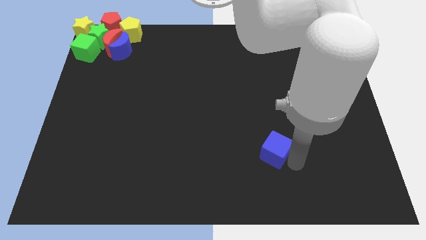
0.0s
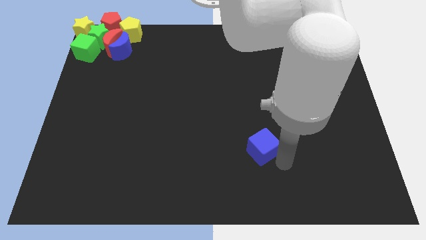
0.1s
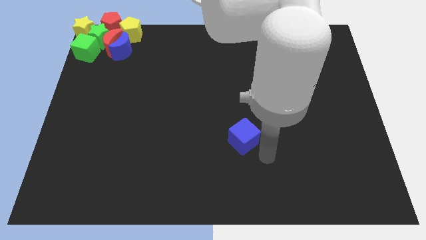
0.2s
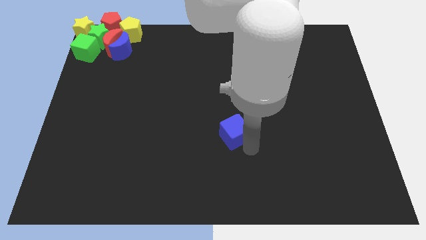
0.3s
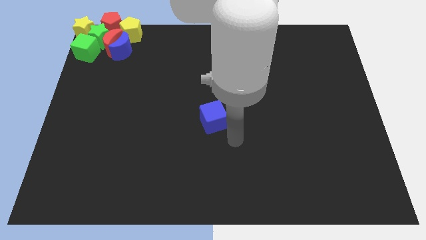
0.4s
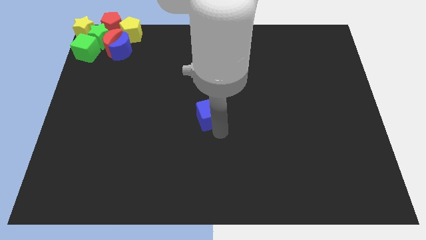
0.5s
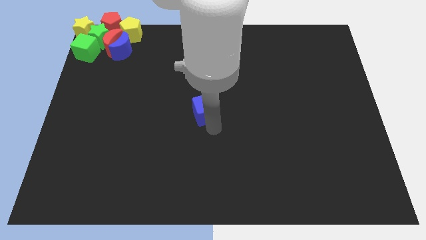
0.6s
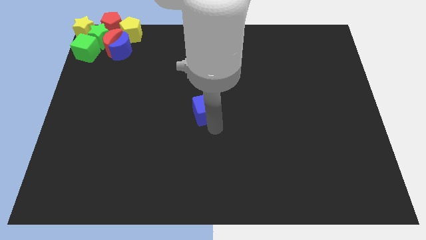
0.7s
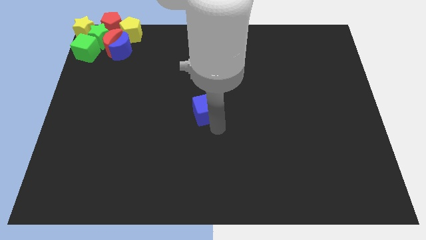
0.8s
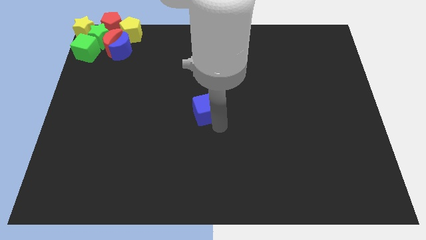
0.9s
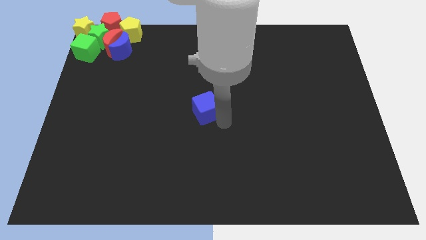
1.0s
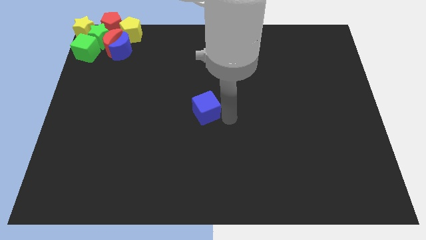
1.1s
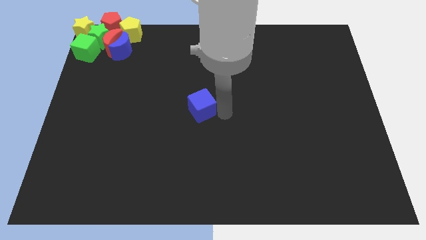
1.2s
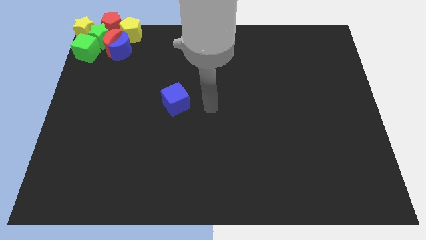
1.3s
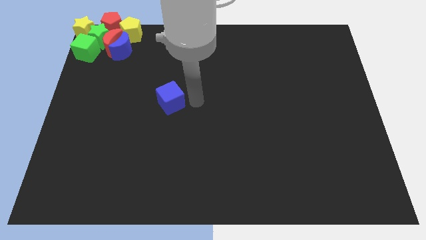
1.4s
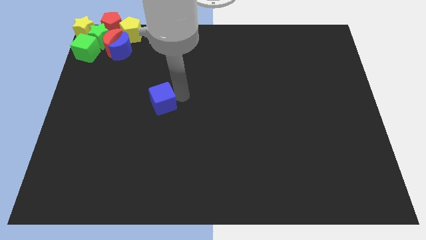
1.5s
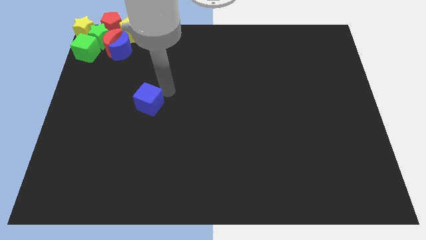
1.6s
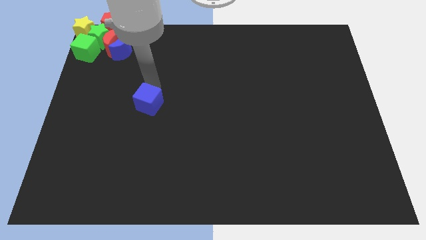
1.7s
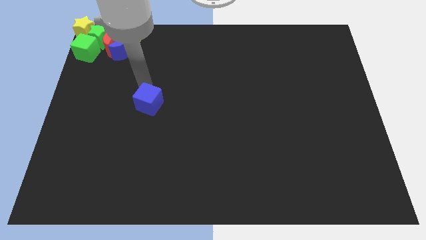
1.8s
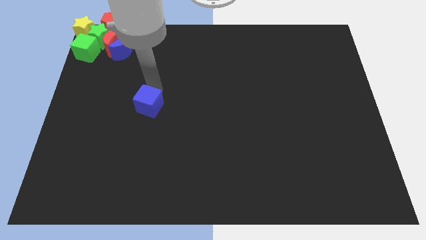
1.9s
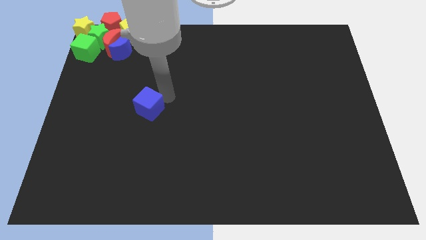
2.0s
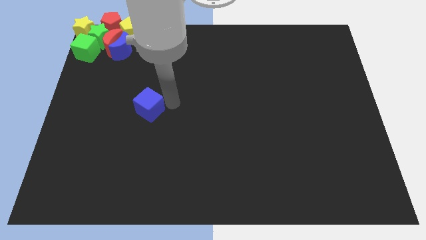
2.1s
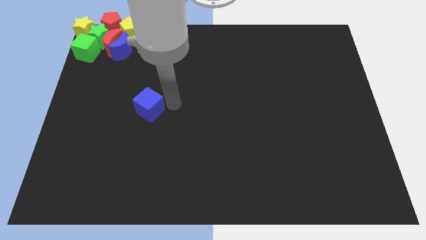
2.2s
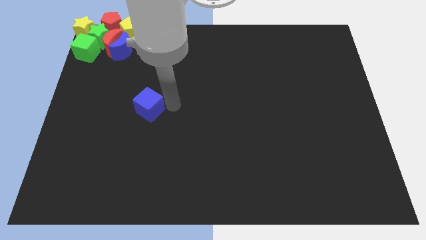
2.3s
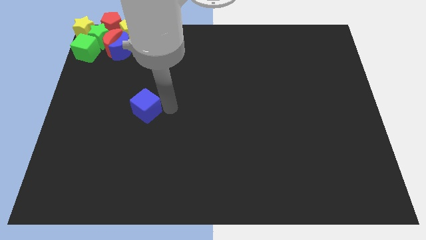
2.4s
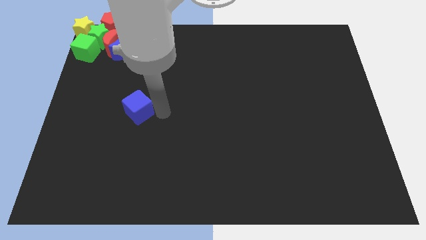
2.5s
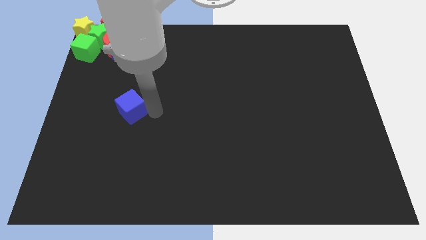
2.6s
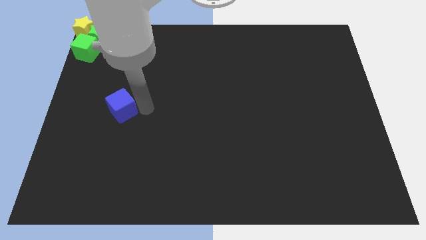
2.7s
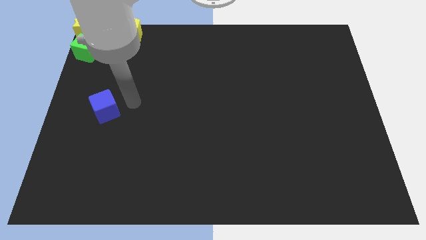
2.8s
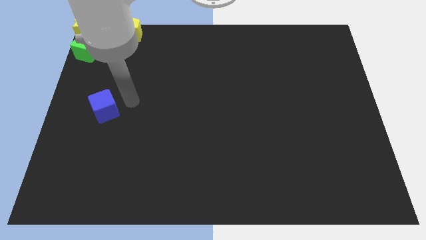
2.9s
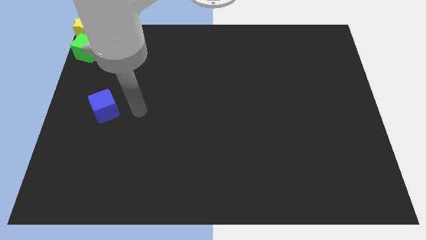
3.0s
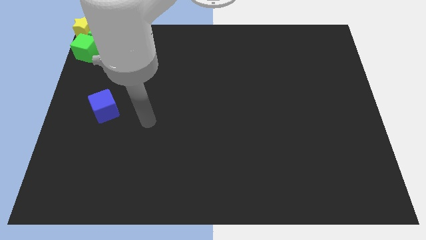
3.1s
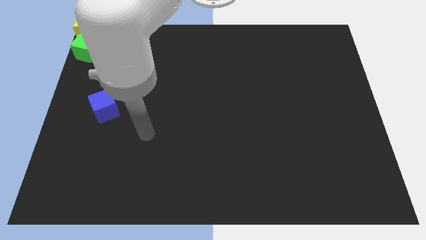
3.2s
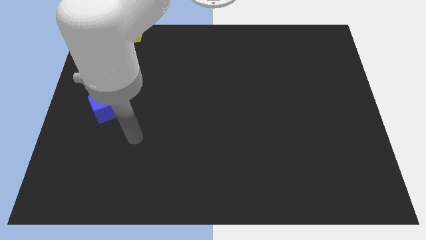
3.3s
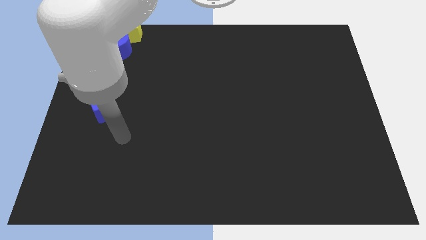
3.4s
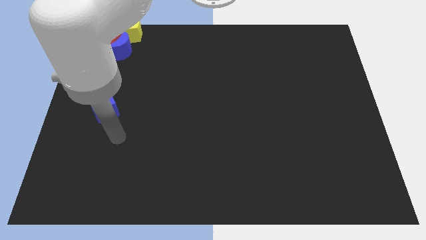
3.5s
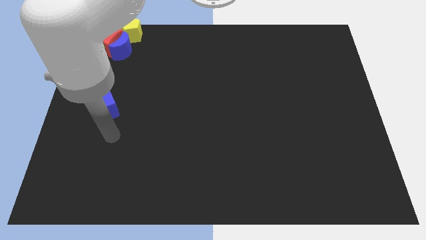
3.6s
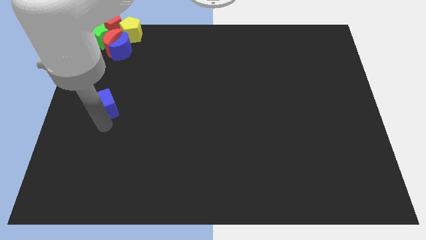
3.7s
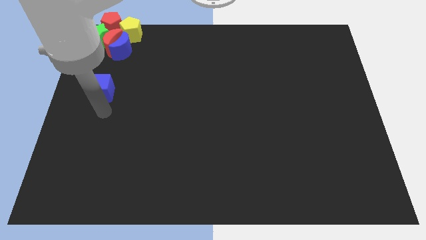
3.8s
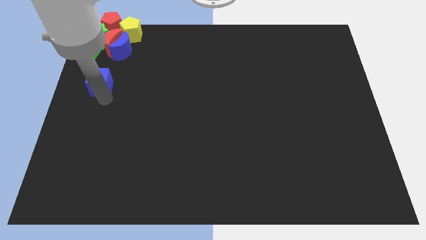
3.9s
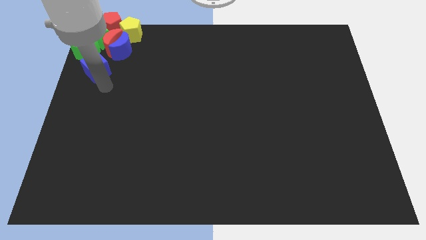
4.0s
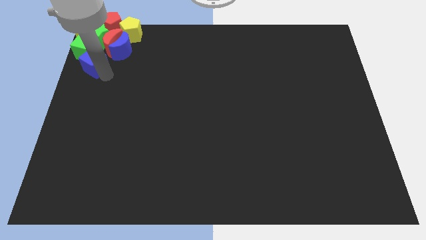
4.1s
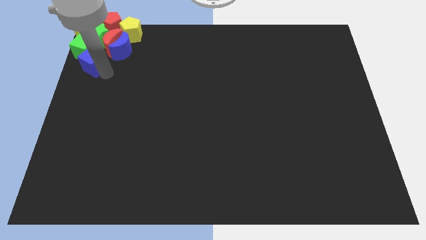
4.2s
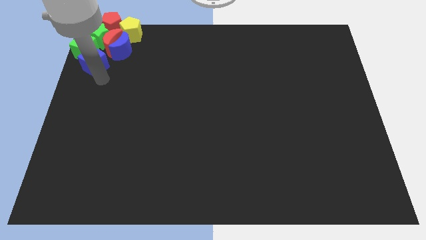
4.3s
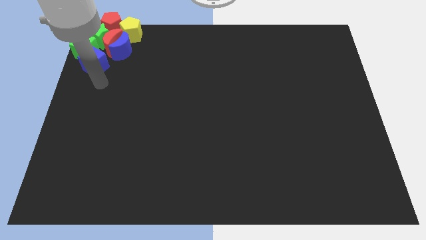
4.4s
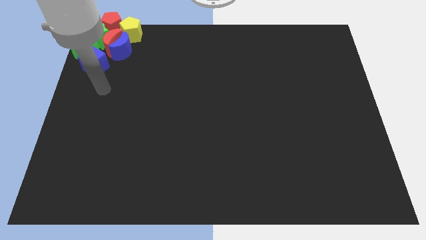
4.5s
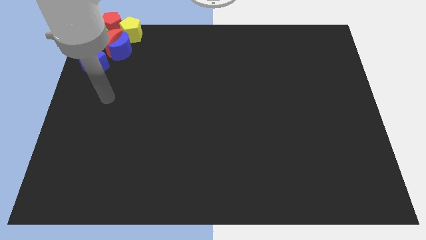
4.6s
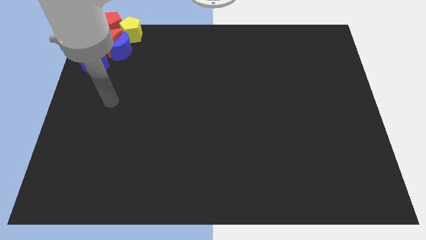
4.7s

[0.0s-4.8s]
move the blue cube into a group of blocks

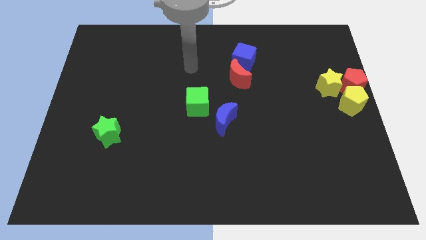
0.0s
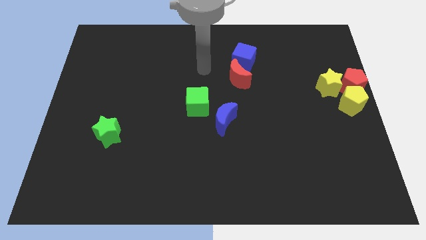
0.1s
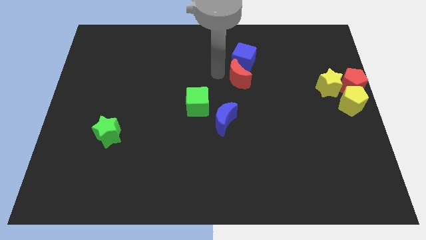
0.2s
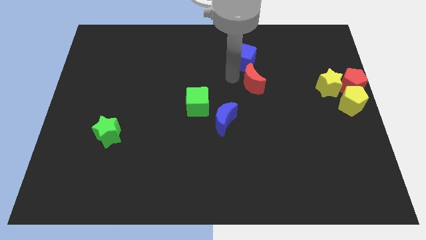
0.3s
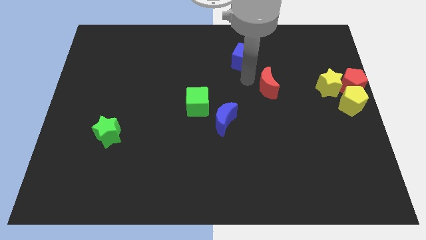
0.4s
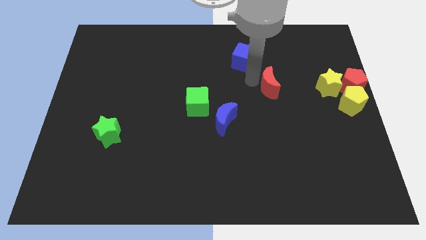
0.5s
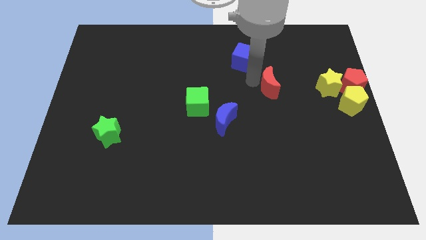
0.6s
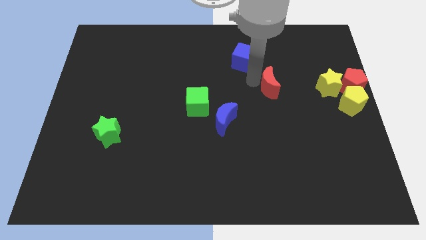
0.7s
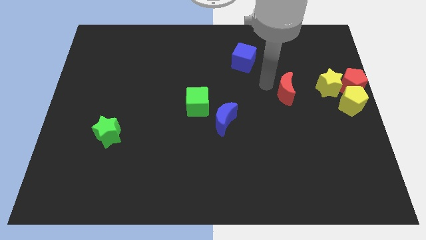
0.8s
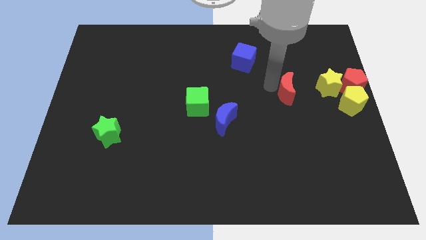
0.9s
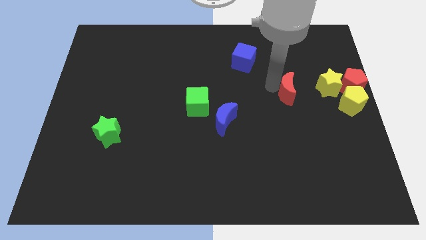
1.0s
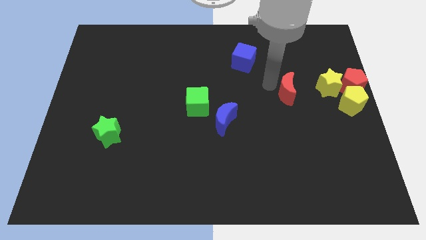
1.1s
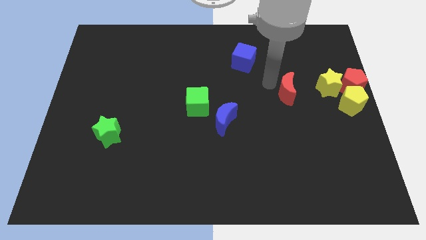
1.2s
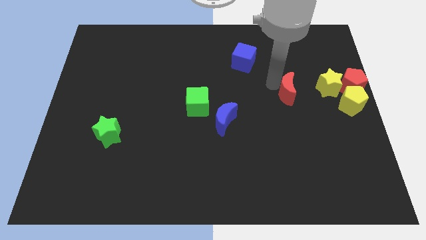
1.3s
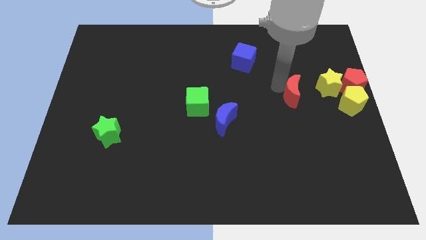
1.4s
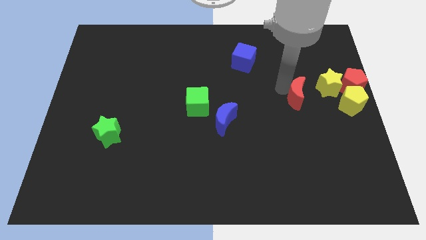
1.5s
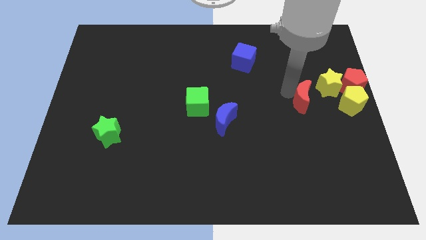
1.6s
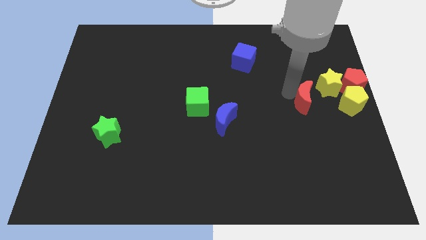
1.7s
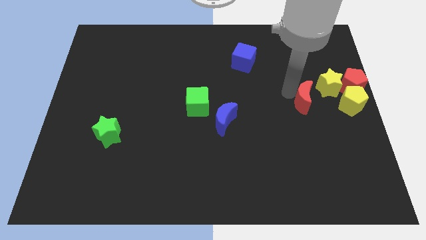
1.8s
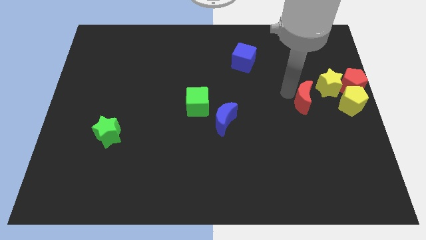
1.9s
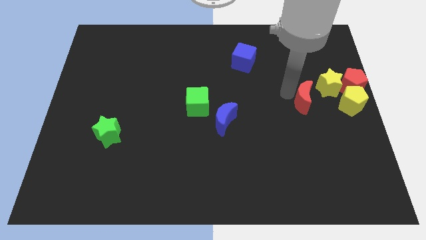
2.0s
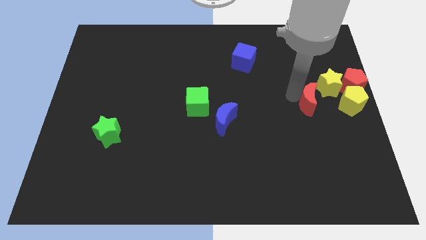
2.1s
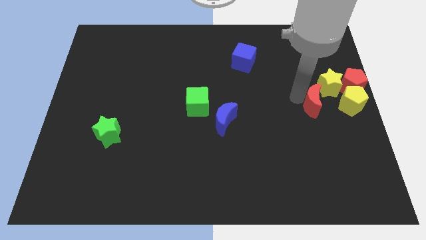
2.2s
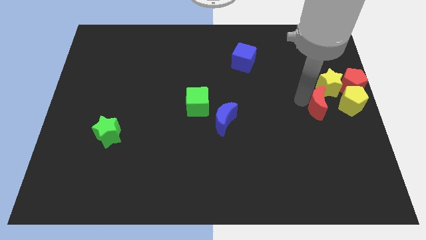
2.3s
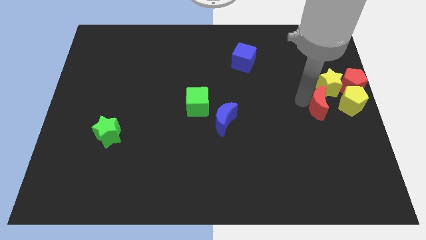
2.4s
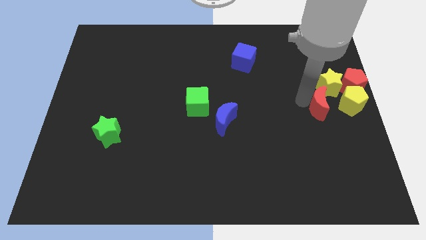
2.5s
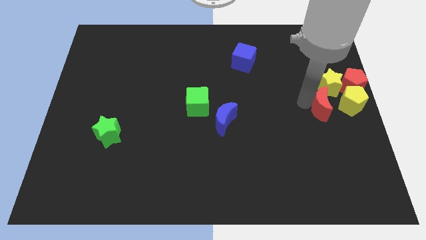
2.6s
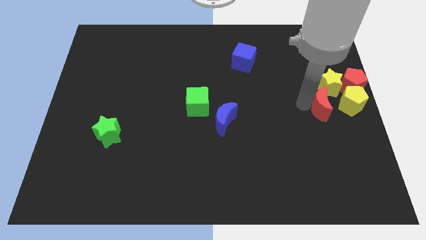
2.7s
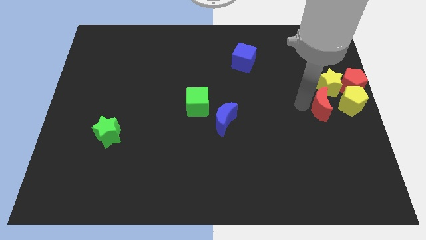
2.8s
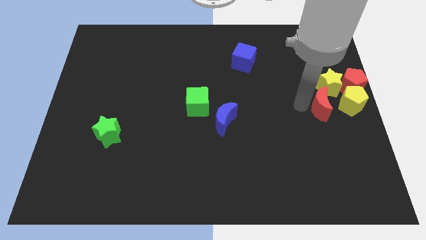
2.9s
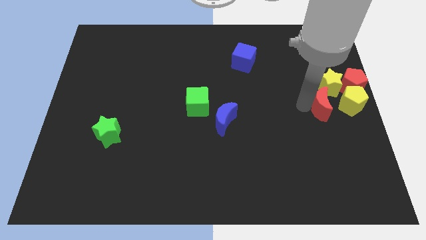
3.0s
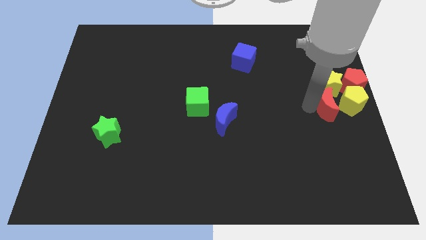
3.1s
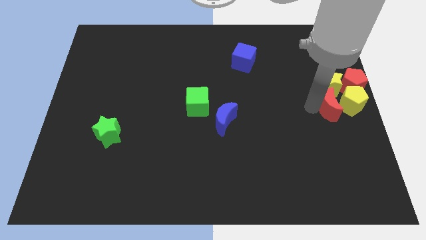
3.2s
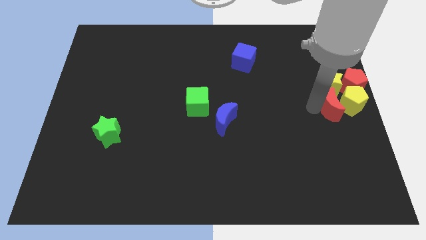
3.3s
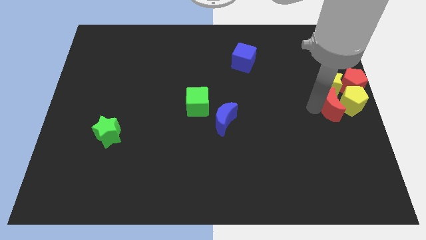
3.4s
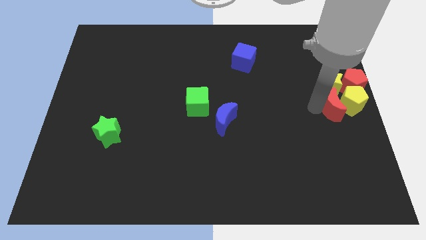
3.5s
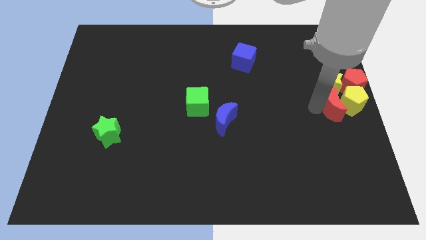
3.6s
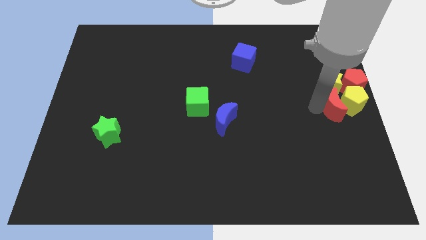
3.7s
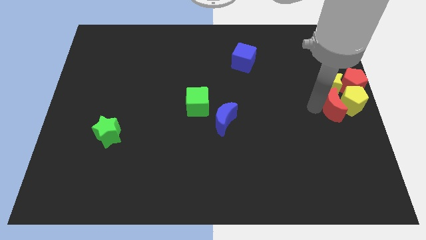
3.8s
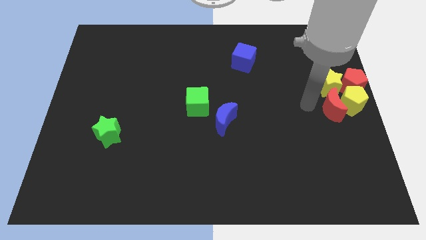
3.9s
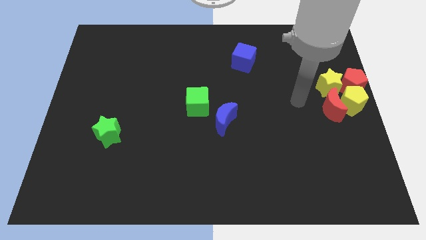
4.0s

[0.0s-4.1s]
push red crescent below yellow star

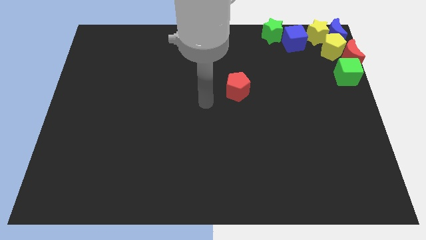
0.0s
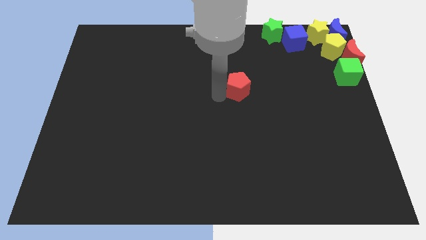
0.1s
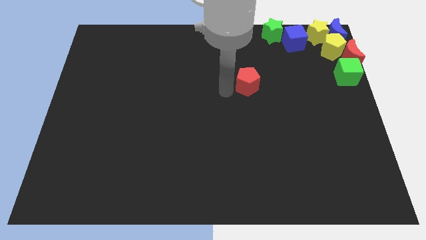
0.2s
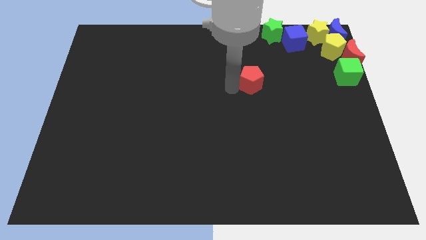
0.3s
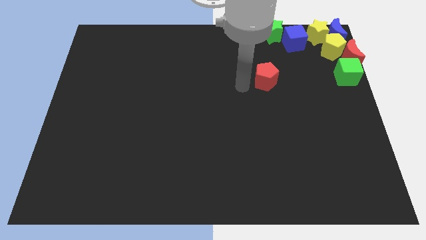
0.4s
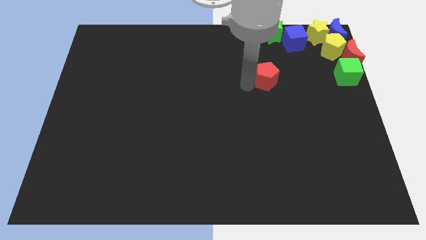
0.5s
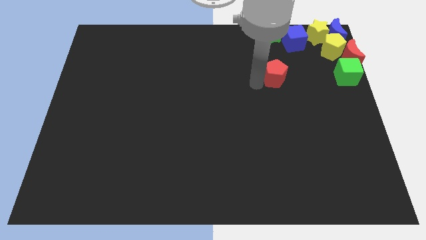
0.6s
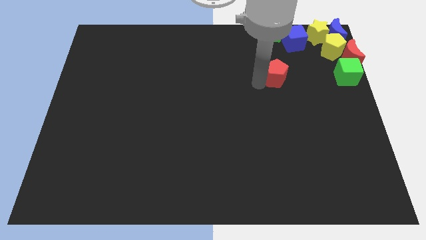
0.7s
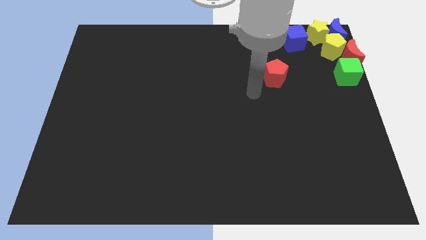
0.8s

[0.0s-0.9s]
place the red pentagon down to the green star
